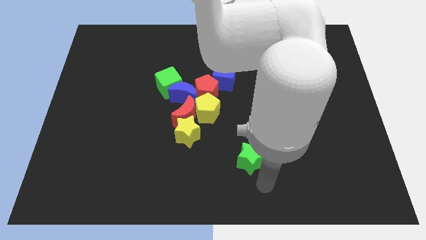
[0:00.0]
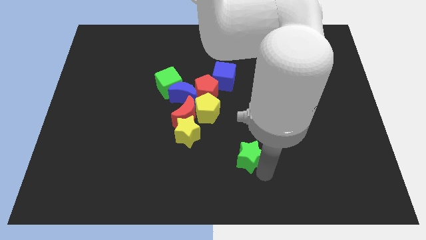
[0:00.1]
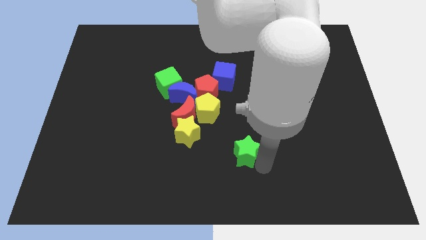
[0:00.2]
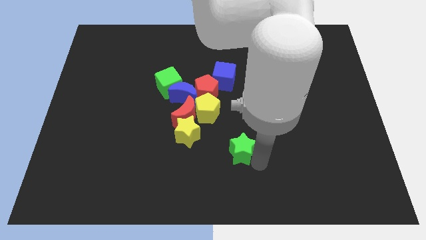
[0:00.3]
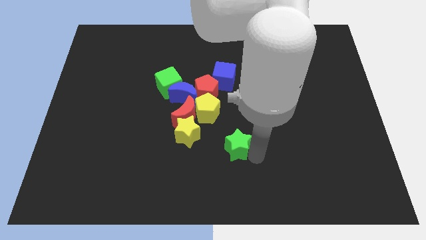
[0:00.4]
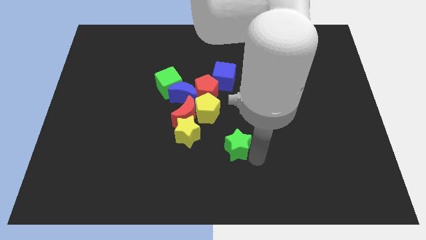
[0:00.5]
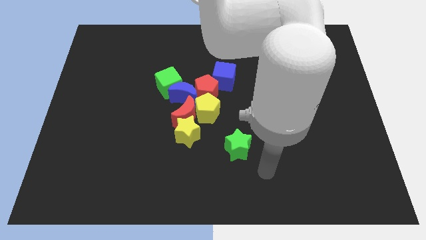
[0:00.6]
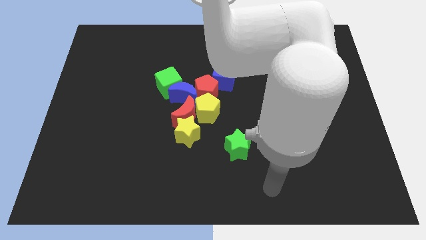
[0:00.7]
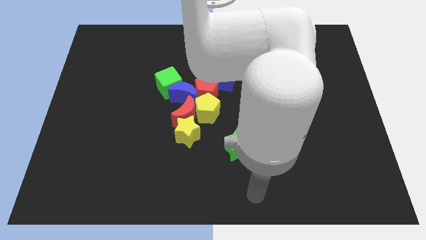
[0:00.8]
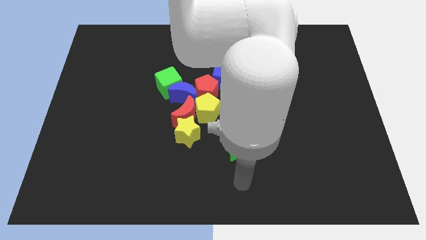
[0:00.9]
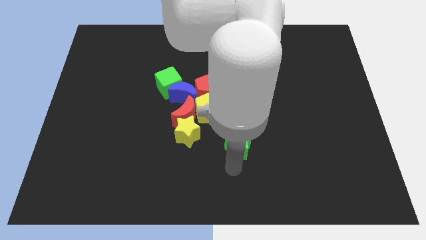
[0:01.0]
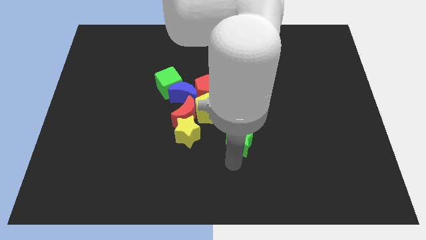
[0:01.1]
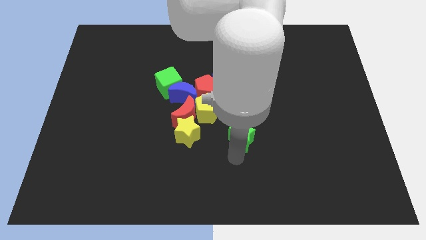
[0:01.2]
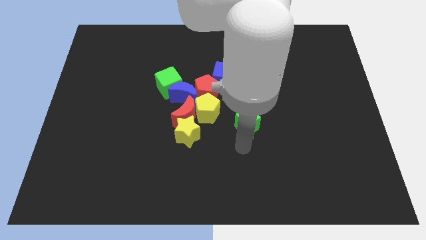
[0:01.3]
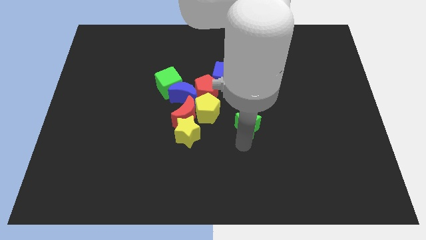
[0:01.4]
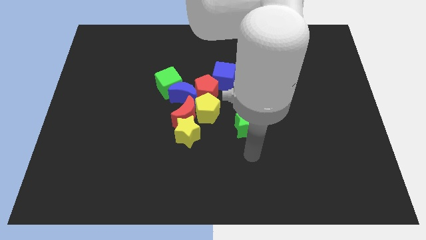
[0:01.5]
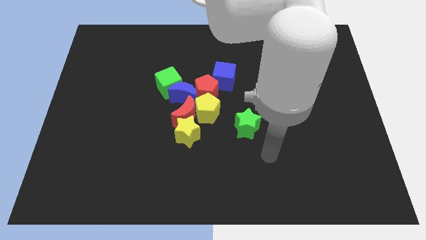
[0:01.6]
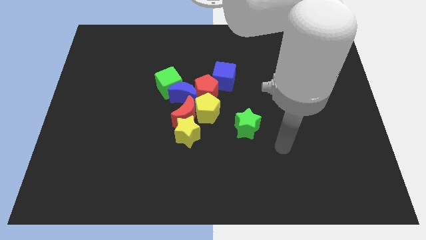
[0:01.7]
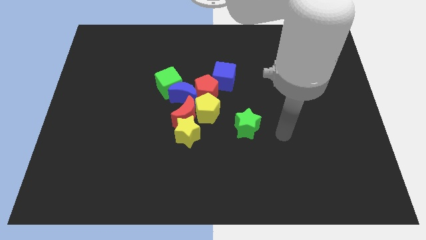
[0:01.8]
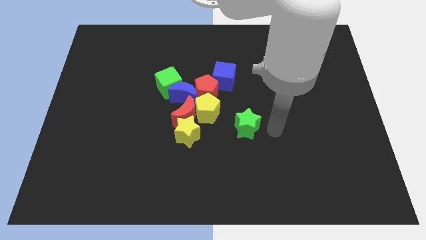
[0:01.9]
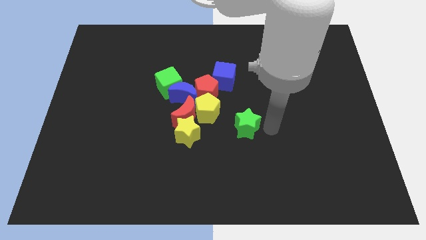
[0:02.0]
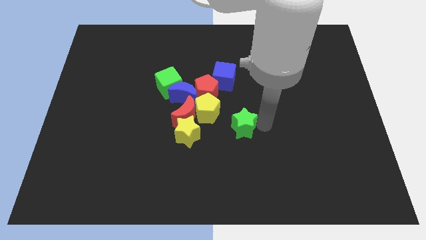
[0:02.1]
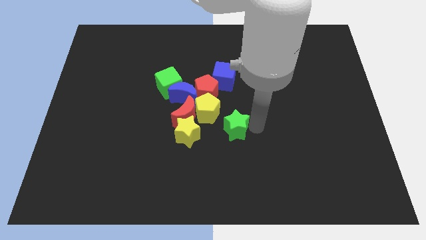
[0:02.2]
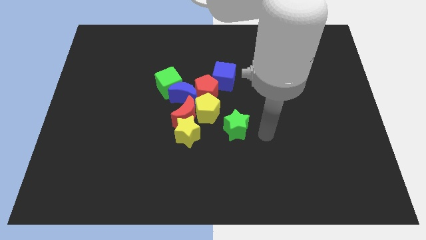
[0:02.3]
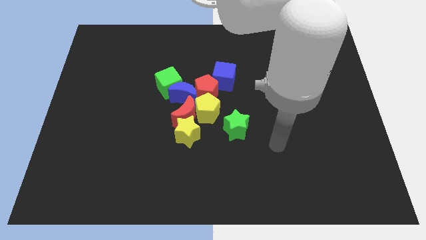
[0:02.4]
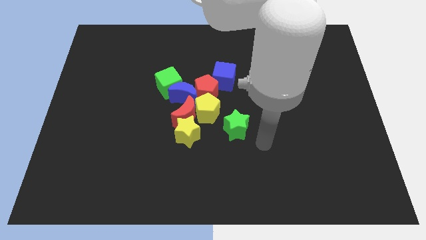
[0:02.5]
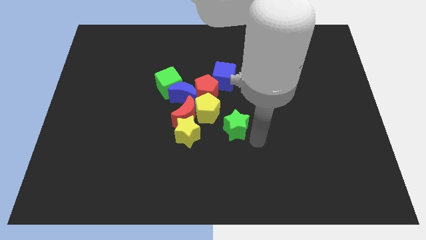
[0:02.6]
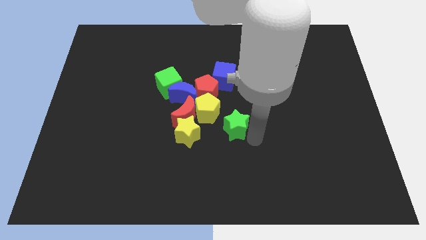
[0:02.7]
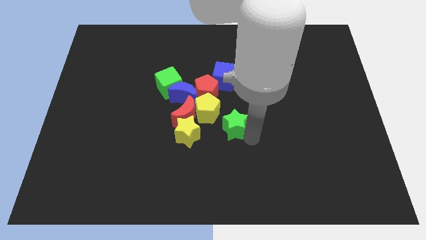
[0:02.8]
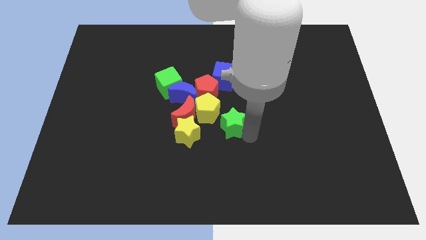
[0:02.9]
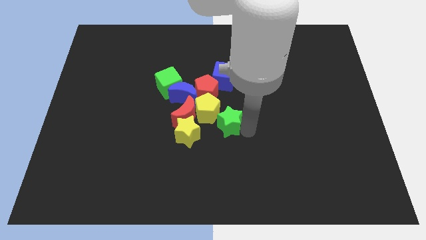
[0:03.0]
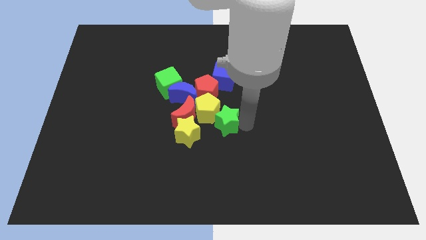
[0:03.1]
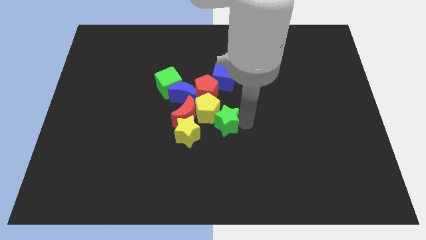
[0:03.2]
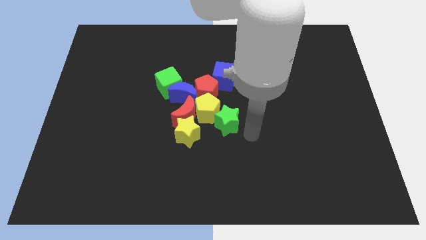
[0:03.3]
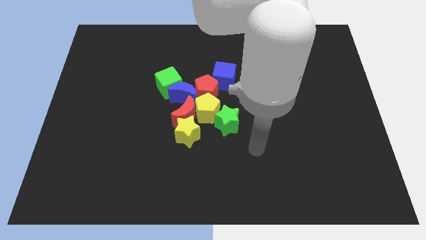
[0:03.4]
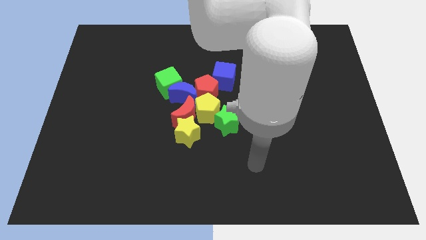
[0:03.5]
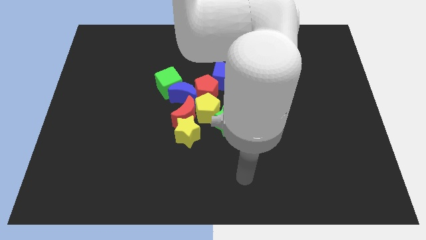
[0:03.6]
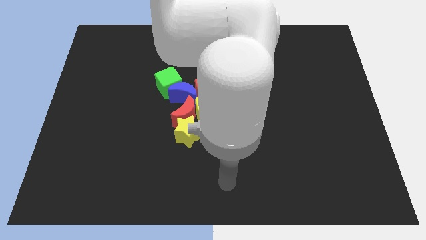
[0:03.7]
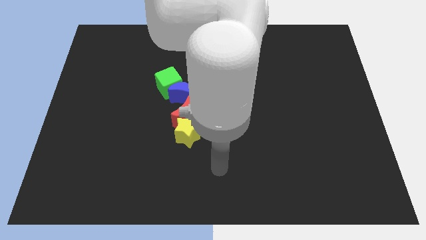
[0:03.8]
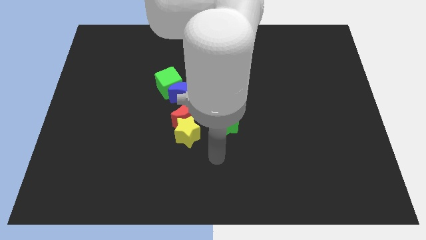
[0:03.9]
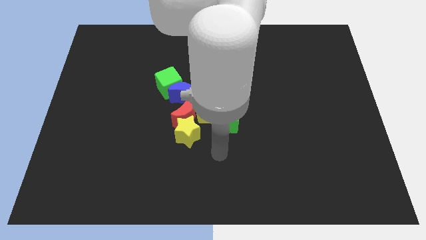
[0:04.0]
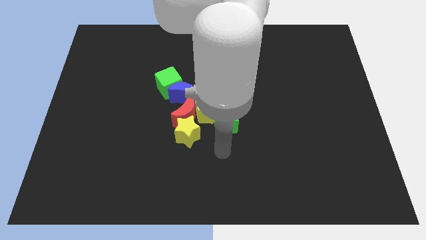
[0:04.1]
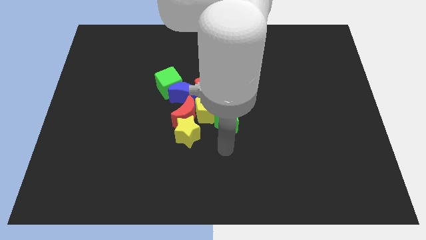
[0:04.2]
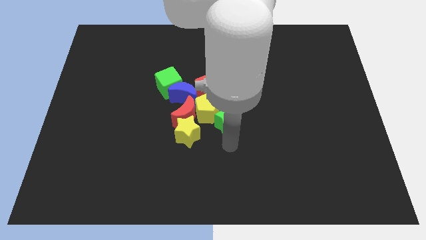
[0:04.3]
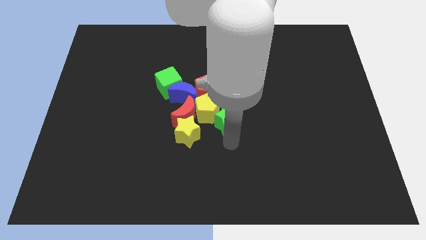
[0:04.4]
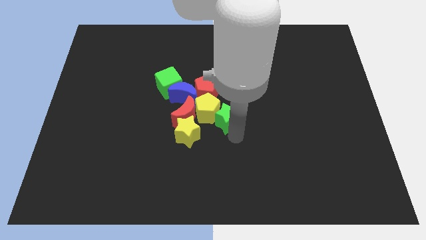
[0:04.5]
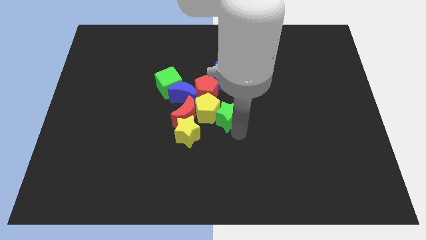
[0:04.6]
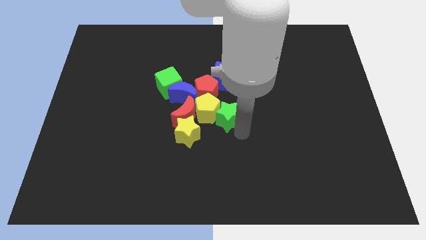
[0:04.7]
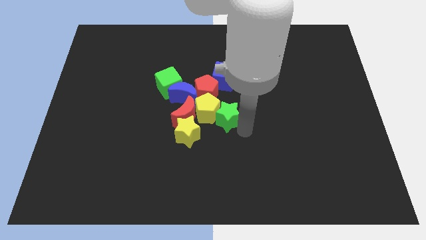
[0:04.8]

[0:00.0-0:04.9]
move green star into group of blocks

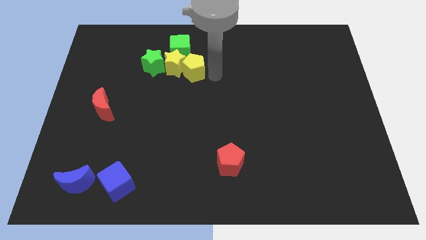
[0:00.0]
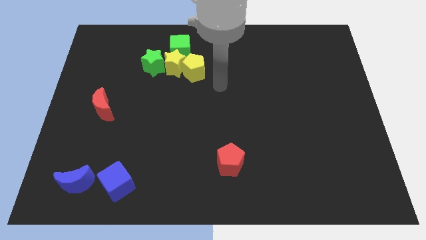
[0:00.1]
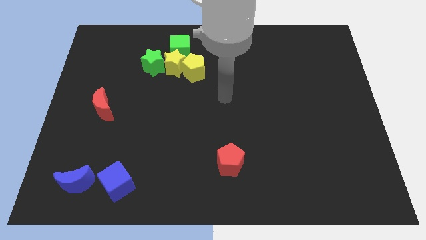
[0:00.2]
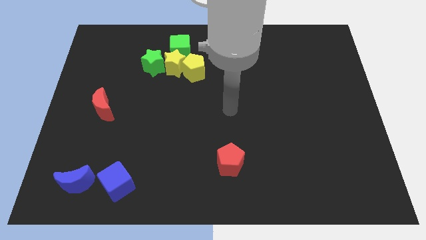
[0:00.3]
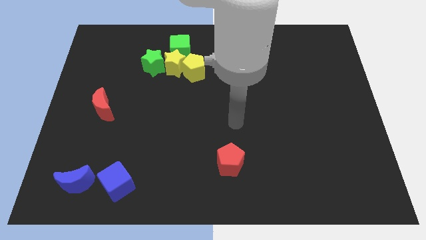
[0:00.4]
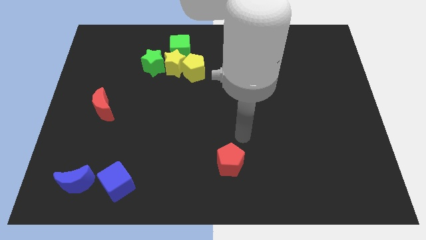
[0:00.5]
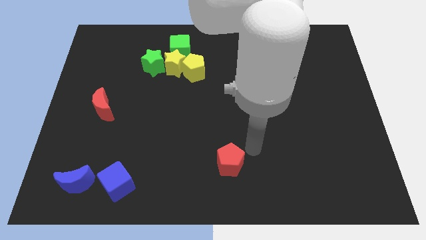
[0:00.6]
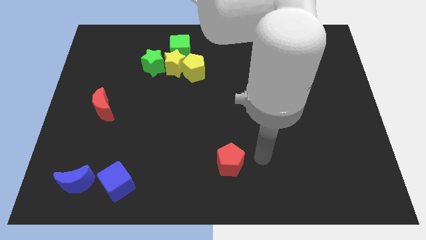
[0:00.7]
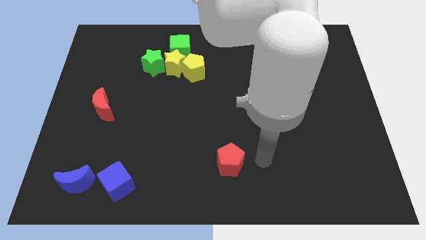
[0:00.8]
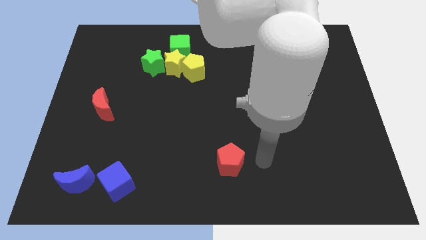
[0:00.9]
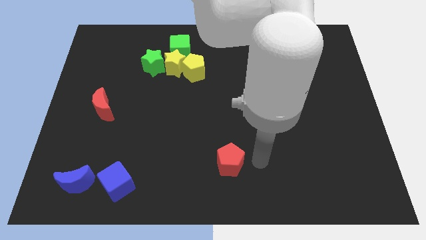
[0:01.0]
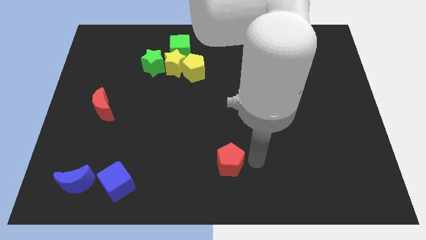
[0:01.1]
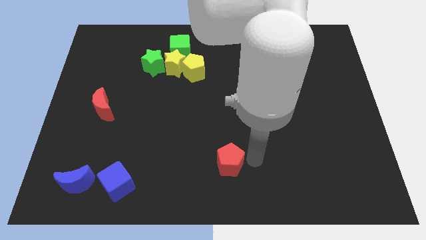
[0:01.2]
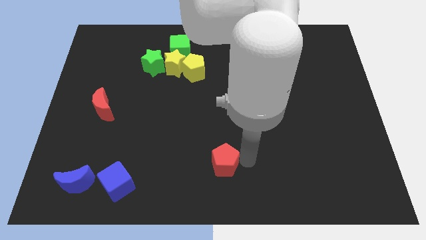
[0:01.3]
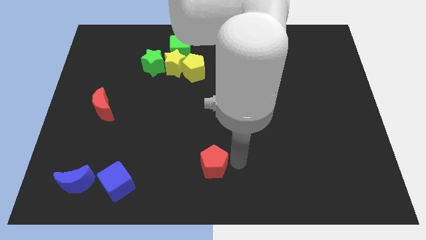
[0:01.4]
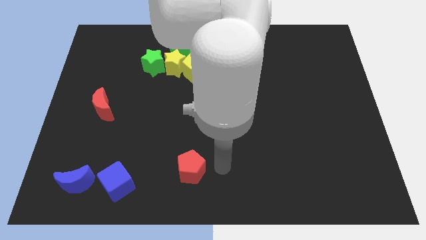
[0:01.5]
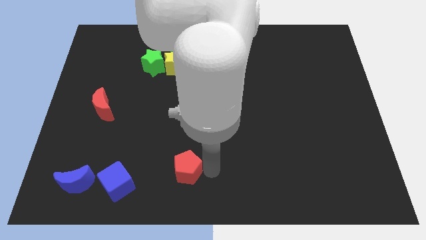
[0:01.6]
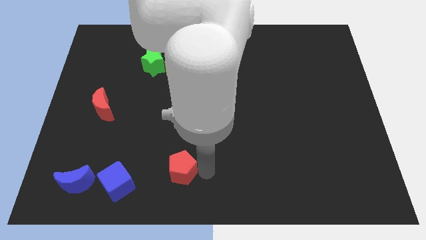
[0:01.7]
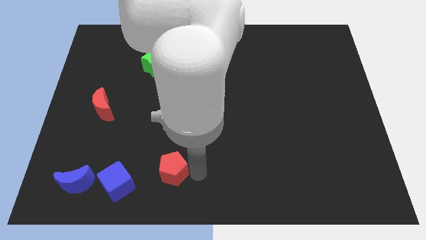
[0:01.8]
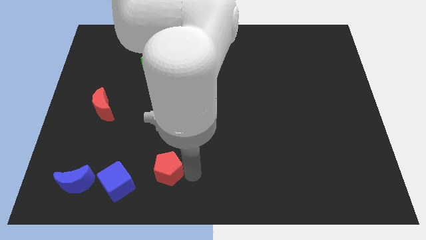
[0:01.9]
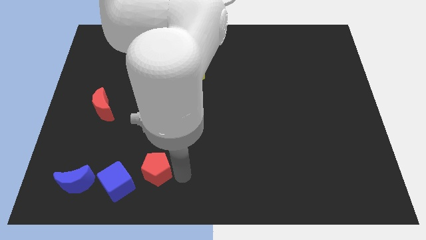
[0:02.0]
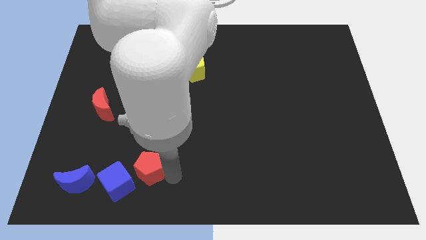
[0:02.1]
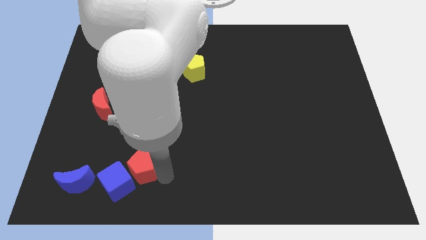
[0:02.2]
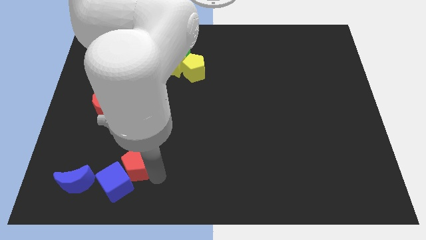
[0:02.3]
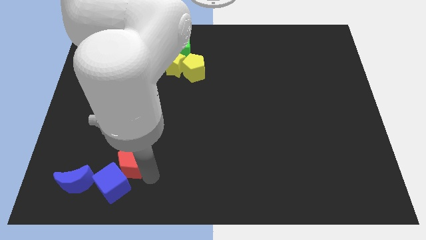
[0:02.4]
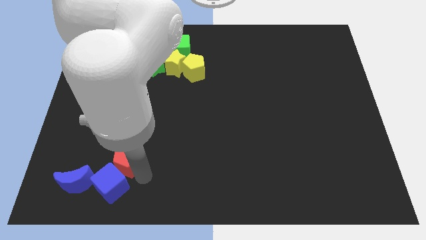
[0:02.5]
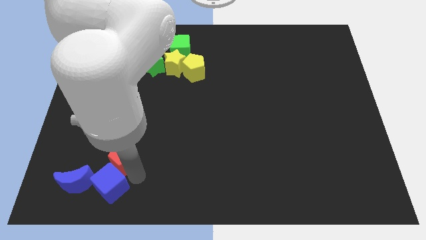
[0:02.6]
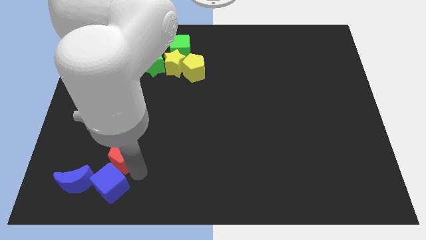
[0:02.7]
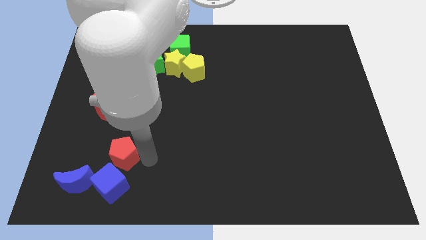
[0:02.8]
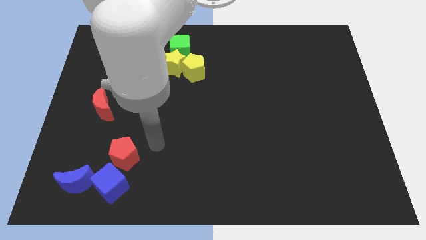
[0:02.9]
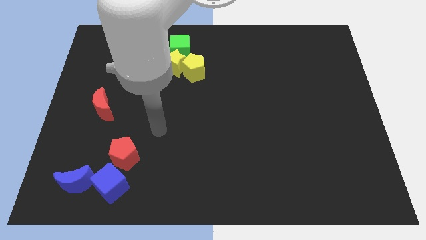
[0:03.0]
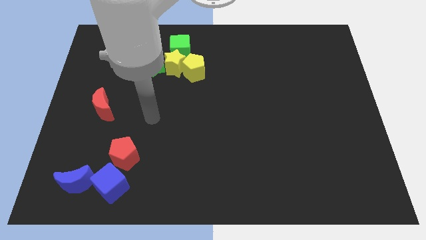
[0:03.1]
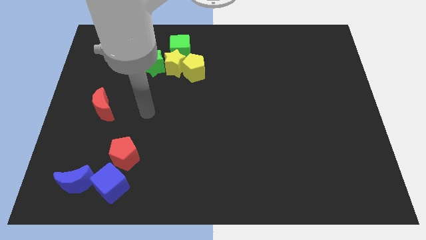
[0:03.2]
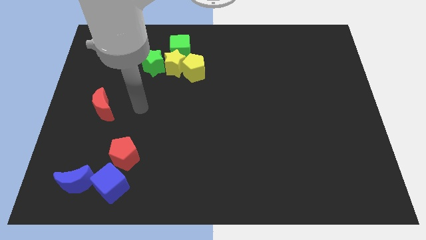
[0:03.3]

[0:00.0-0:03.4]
place red pentagon to the top of blue cube

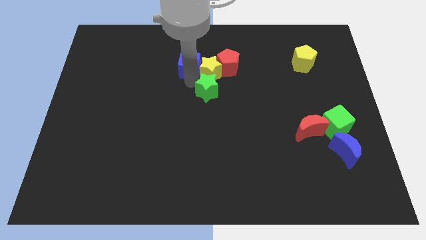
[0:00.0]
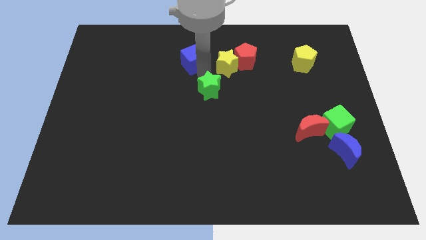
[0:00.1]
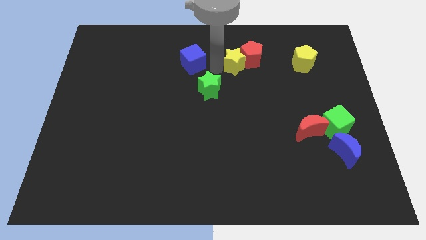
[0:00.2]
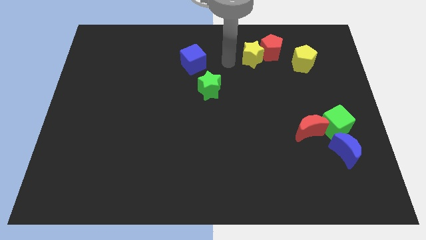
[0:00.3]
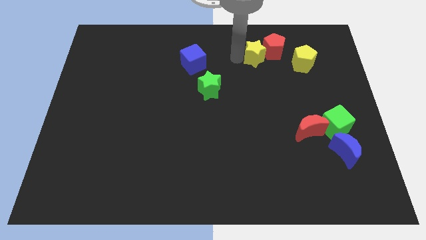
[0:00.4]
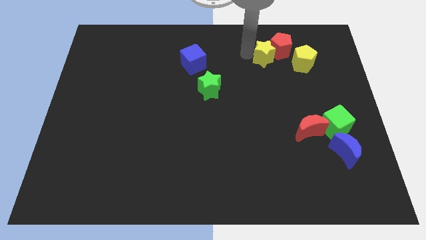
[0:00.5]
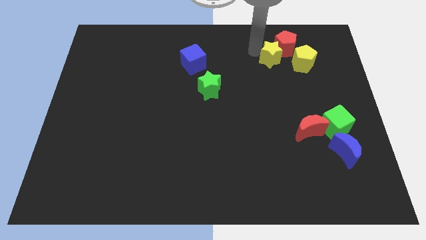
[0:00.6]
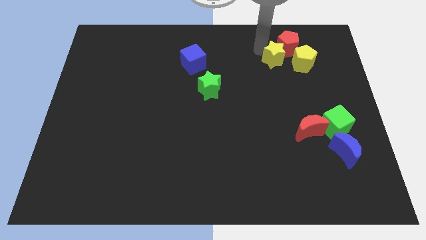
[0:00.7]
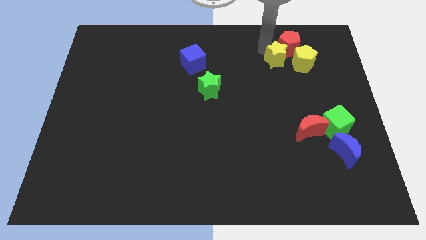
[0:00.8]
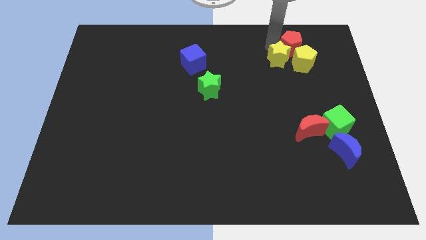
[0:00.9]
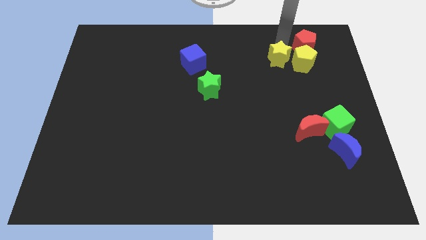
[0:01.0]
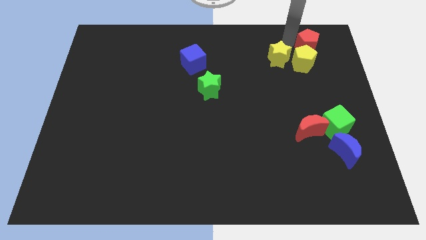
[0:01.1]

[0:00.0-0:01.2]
place yellow star to the left of yellow pentagon
